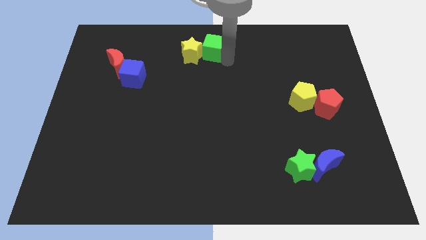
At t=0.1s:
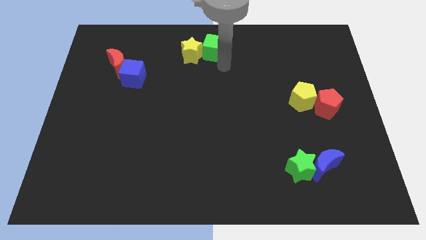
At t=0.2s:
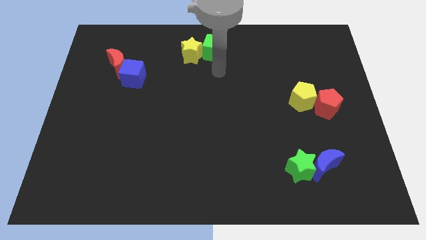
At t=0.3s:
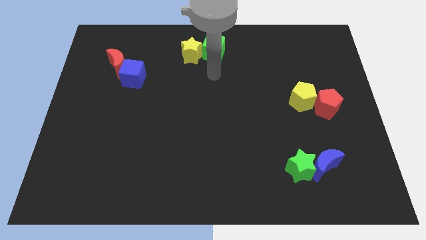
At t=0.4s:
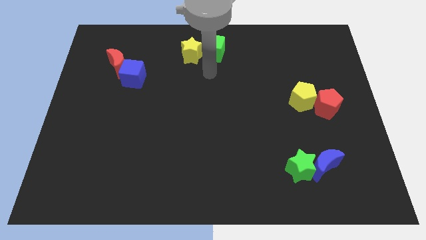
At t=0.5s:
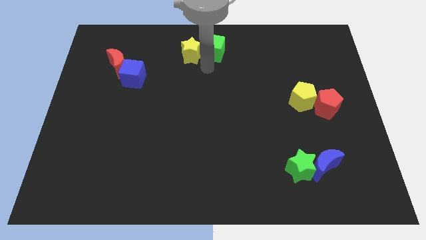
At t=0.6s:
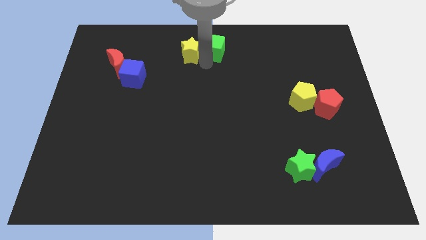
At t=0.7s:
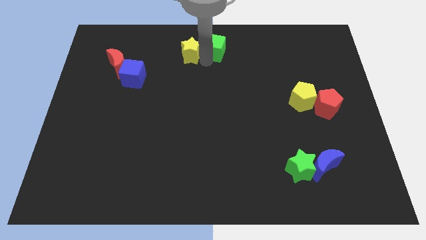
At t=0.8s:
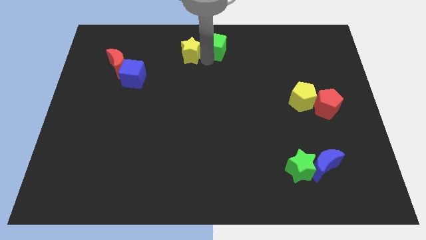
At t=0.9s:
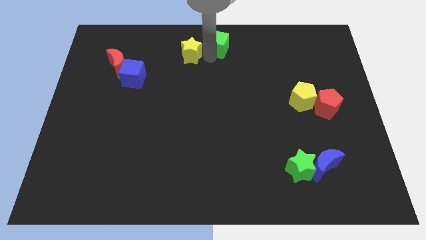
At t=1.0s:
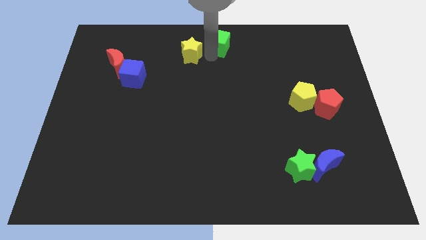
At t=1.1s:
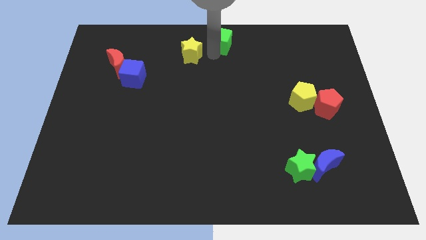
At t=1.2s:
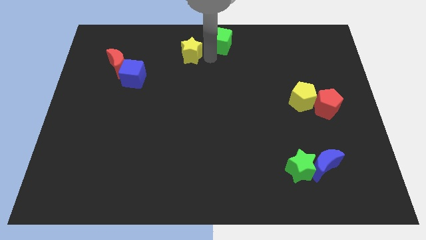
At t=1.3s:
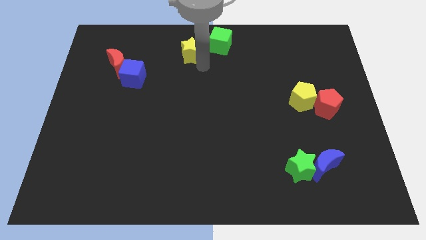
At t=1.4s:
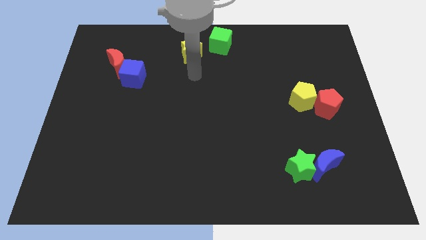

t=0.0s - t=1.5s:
separate the green cube from the yellow star

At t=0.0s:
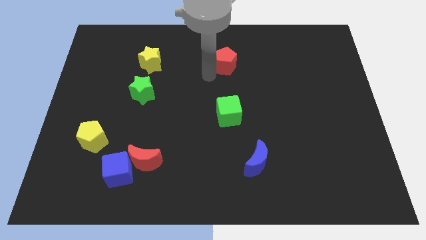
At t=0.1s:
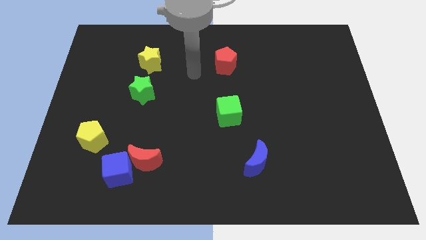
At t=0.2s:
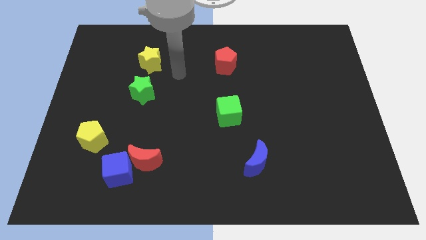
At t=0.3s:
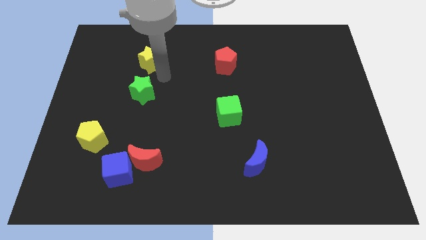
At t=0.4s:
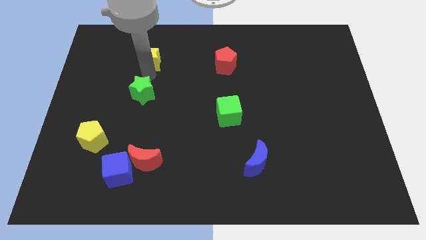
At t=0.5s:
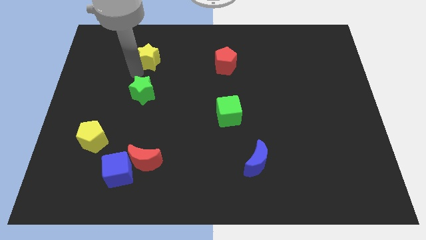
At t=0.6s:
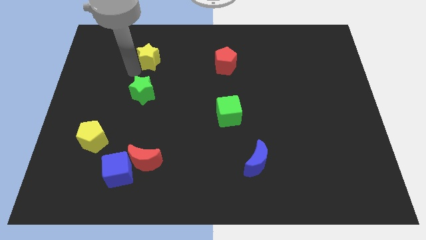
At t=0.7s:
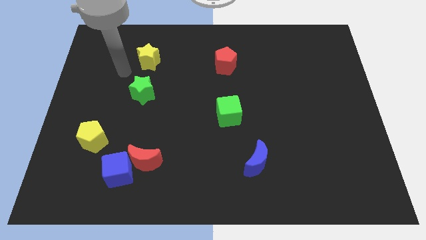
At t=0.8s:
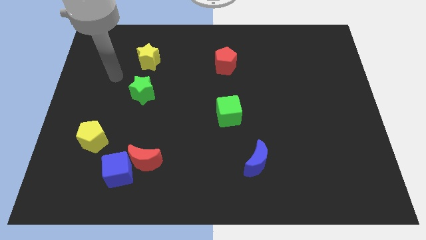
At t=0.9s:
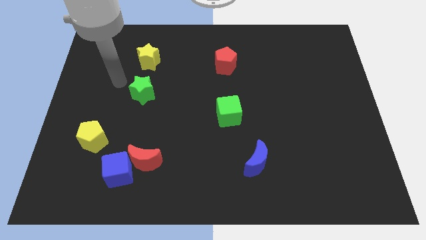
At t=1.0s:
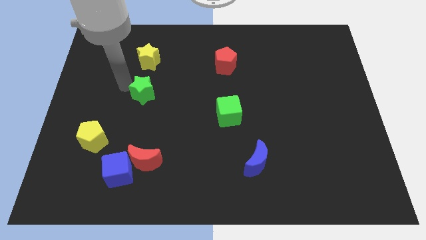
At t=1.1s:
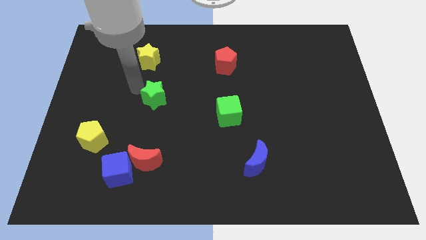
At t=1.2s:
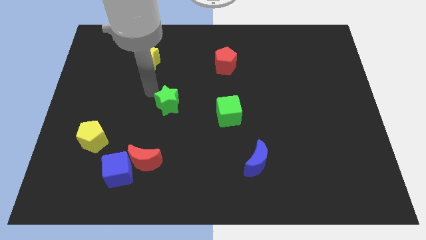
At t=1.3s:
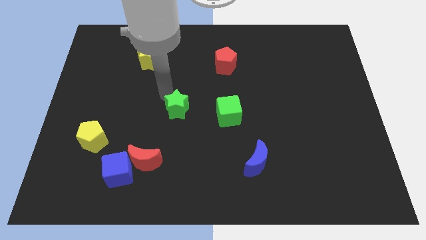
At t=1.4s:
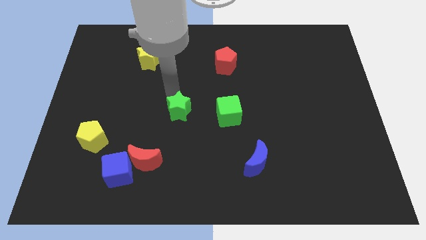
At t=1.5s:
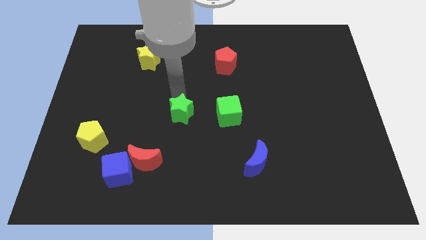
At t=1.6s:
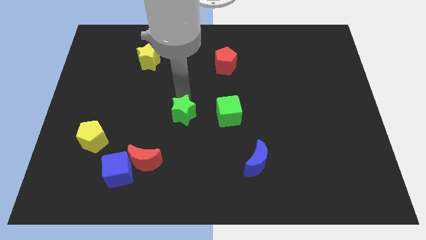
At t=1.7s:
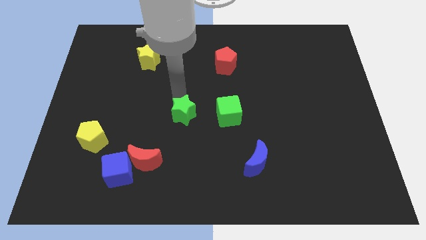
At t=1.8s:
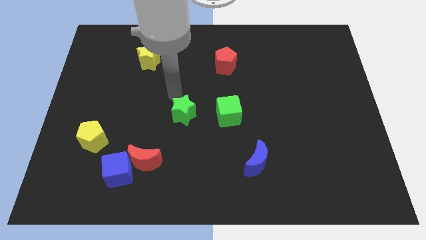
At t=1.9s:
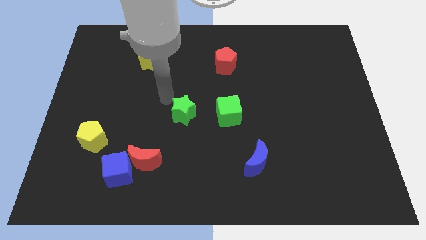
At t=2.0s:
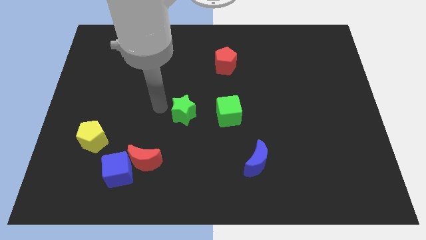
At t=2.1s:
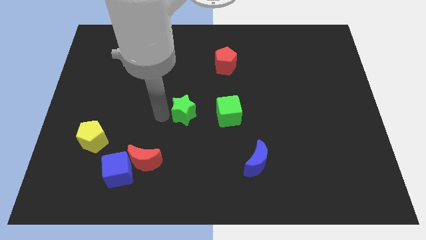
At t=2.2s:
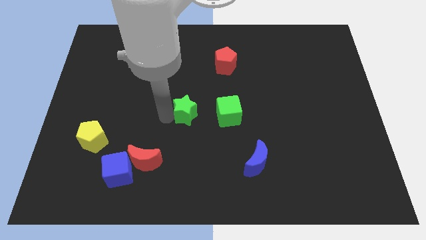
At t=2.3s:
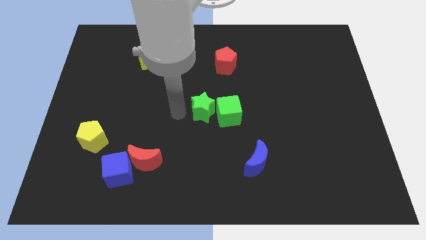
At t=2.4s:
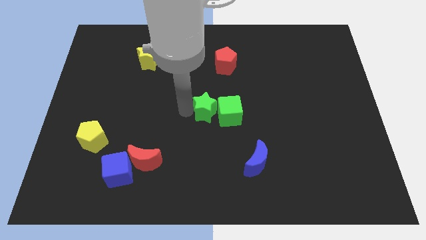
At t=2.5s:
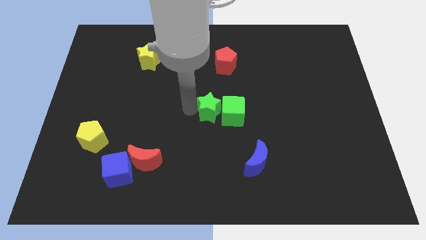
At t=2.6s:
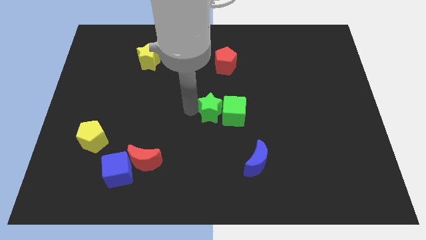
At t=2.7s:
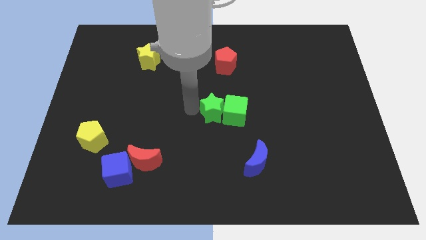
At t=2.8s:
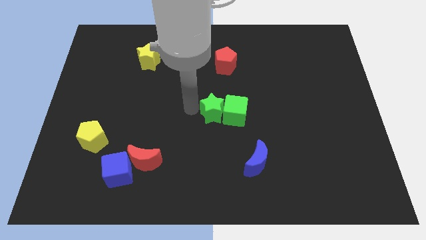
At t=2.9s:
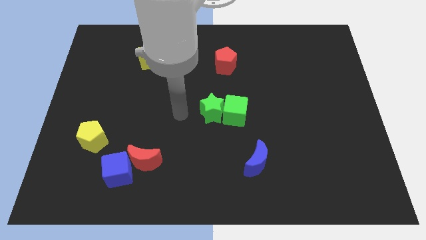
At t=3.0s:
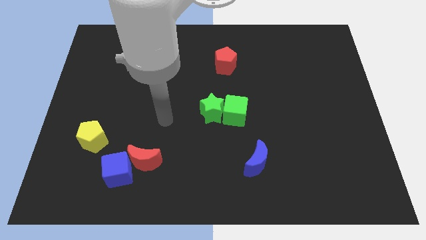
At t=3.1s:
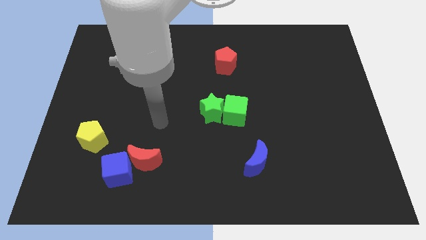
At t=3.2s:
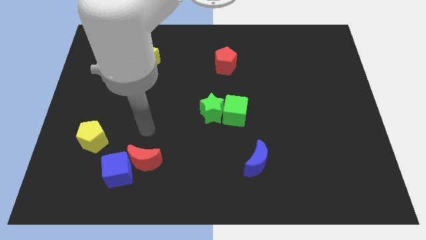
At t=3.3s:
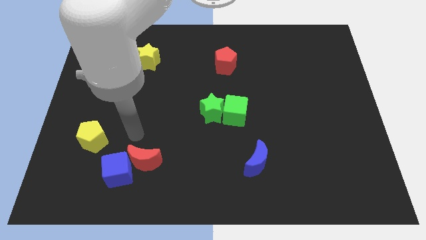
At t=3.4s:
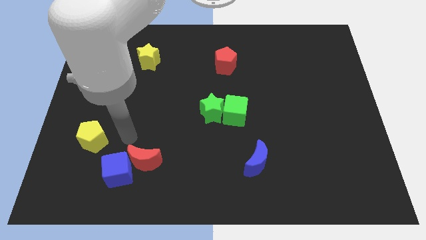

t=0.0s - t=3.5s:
push the green star beside the green cube

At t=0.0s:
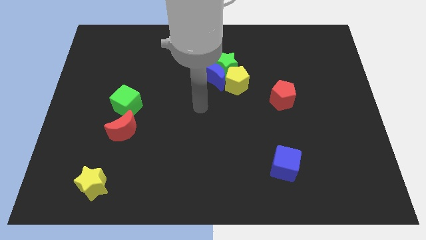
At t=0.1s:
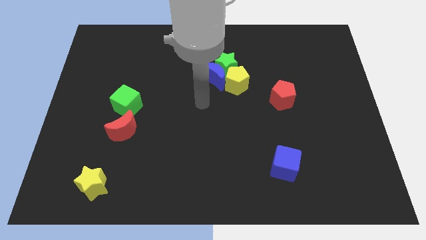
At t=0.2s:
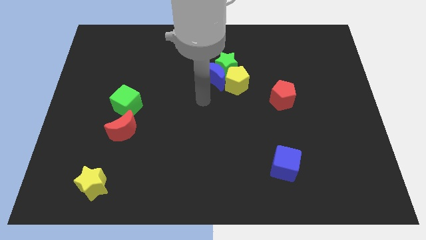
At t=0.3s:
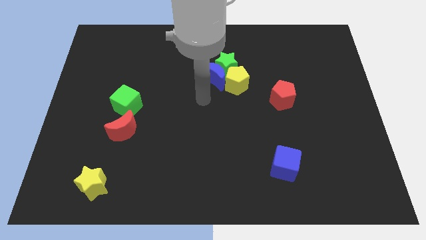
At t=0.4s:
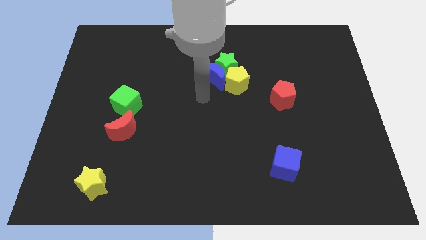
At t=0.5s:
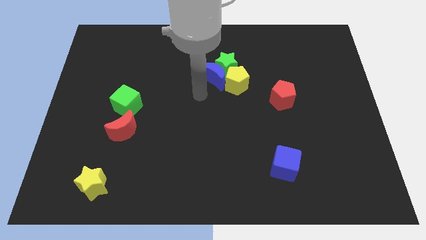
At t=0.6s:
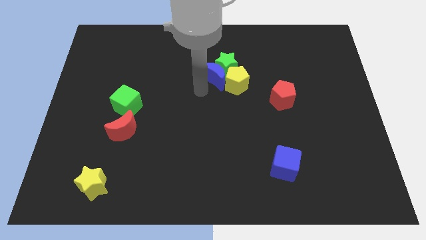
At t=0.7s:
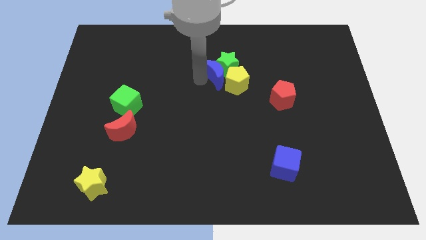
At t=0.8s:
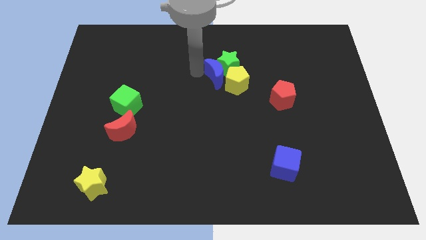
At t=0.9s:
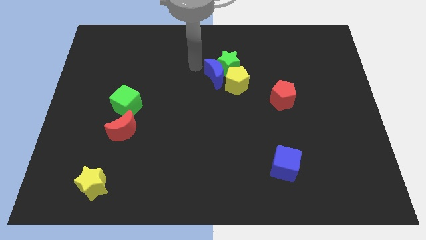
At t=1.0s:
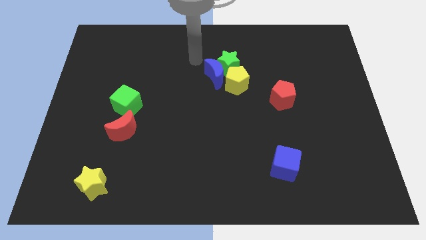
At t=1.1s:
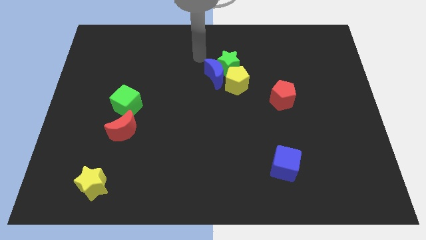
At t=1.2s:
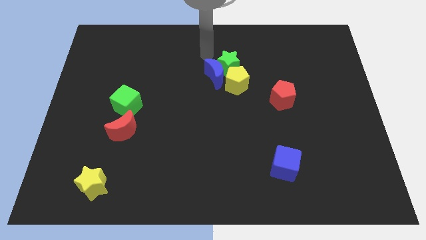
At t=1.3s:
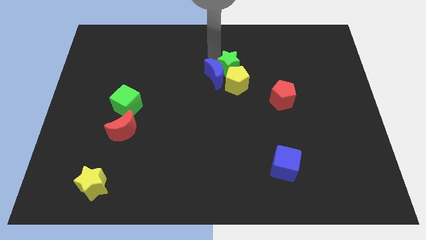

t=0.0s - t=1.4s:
place the arm above the blue moon

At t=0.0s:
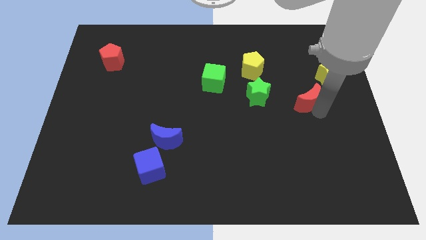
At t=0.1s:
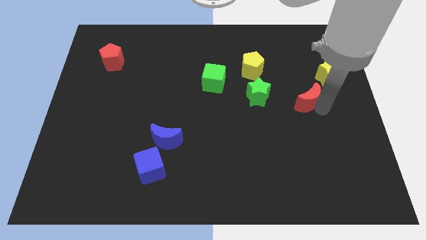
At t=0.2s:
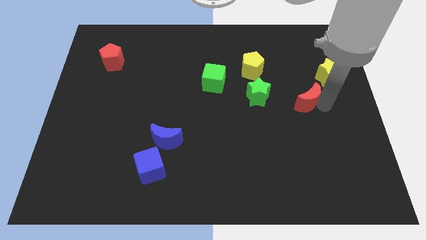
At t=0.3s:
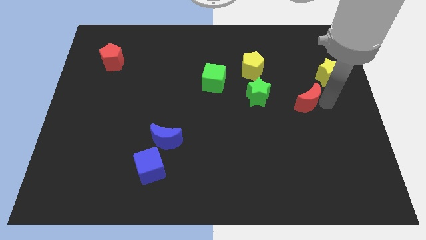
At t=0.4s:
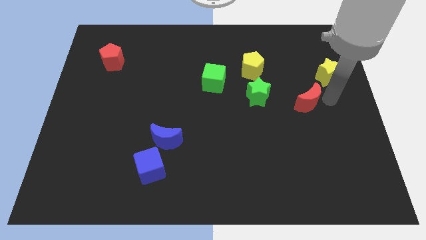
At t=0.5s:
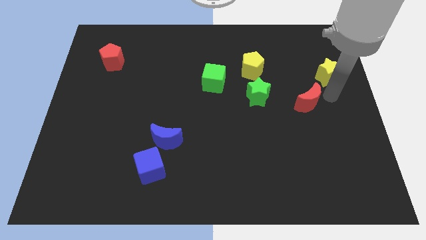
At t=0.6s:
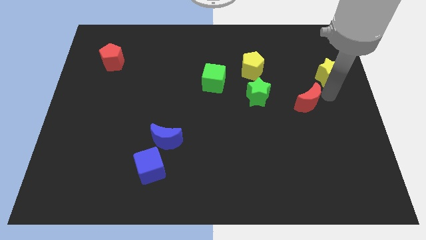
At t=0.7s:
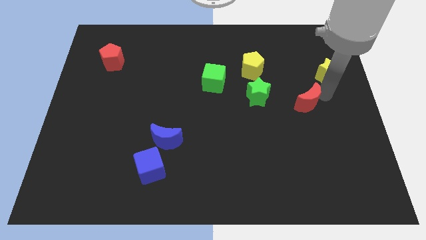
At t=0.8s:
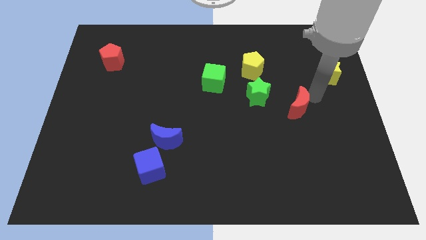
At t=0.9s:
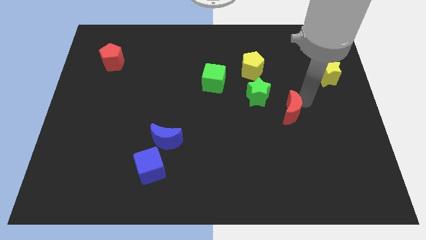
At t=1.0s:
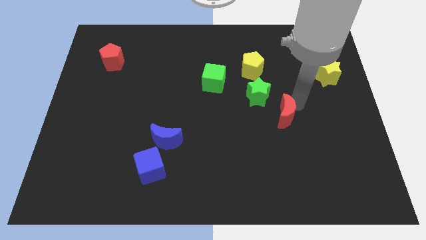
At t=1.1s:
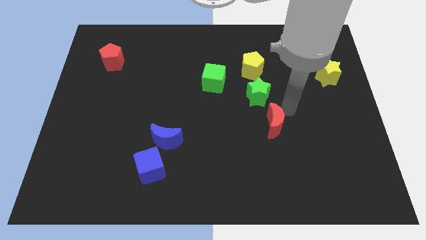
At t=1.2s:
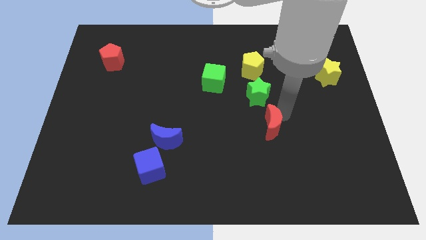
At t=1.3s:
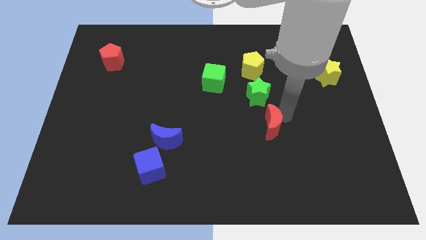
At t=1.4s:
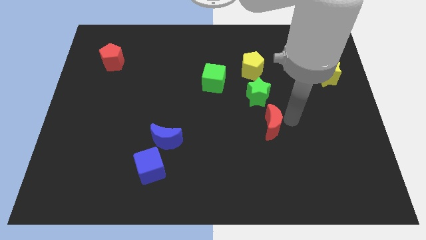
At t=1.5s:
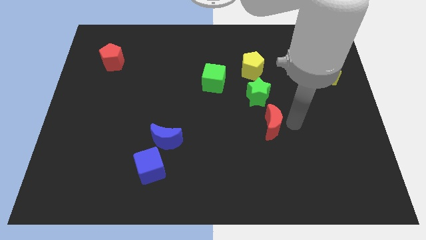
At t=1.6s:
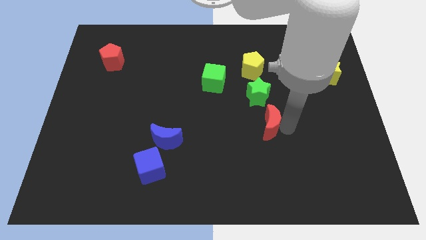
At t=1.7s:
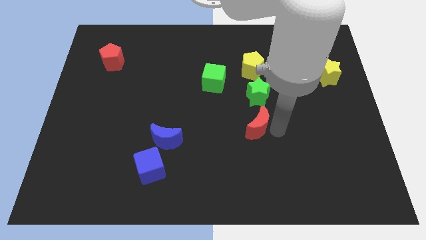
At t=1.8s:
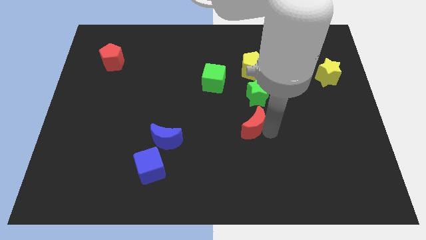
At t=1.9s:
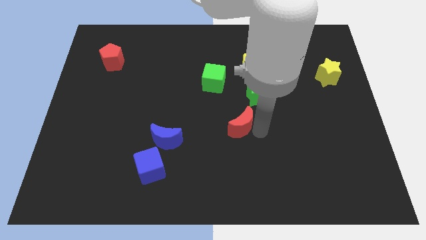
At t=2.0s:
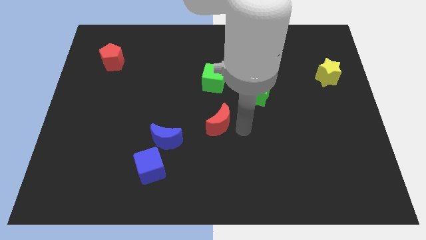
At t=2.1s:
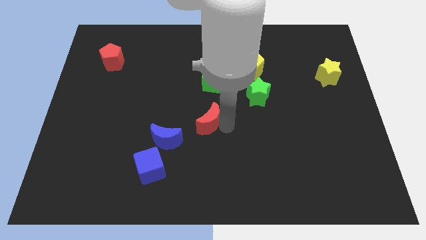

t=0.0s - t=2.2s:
move the red crescent to the middle of the board

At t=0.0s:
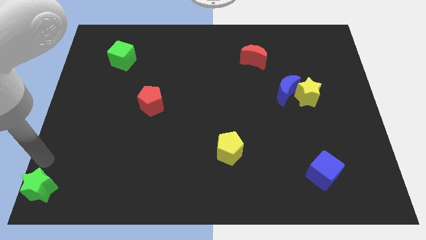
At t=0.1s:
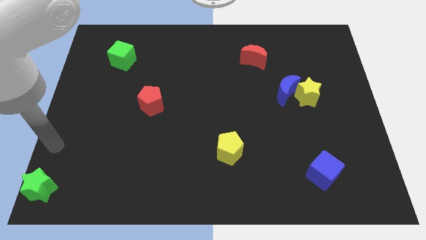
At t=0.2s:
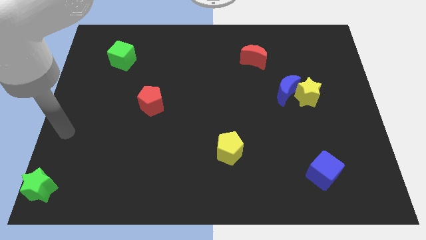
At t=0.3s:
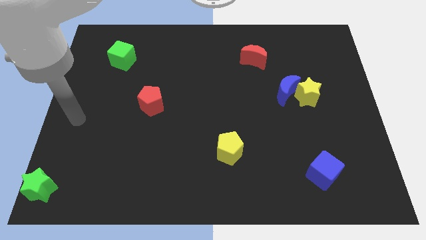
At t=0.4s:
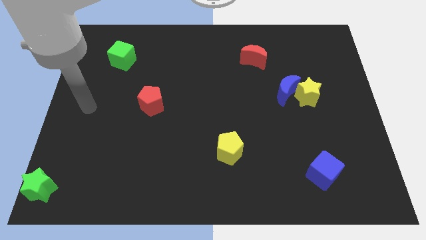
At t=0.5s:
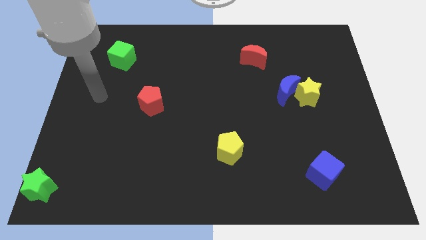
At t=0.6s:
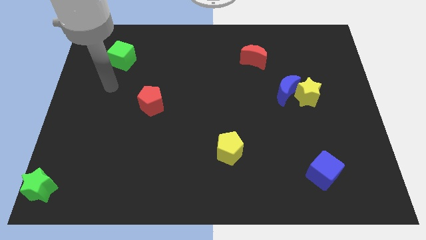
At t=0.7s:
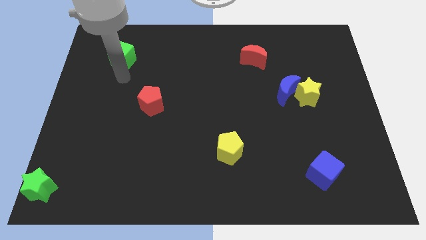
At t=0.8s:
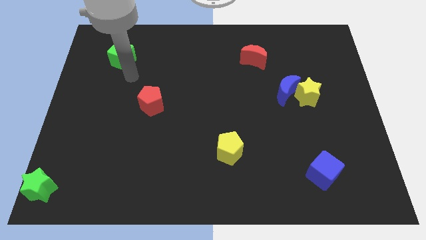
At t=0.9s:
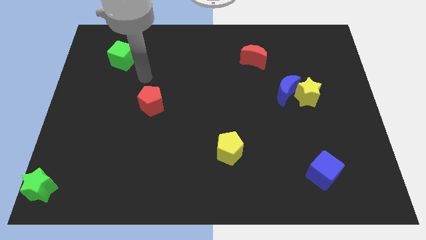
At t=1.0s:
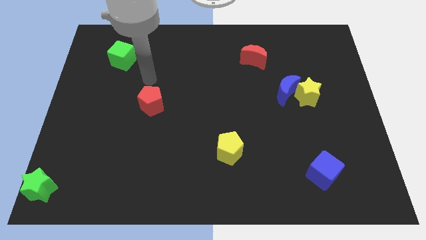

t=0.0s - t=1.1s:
place your hand above the red pentagon
